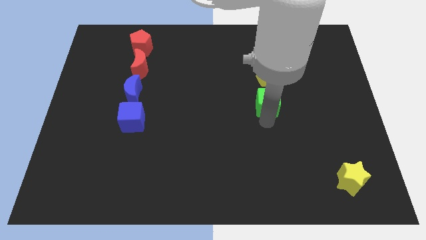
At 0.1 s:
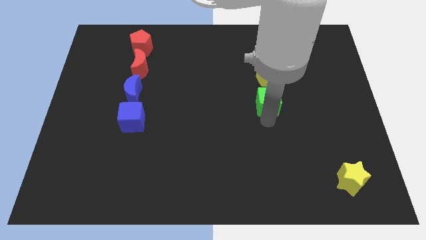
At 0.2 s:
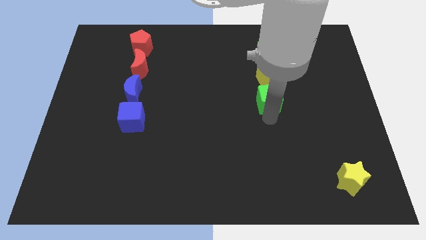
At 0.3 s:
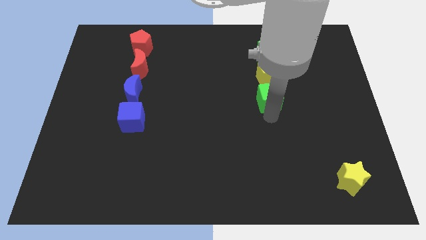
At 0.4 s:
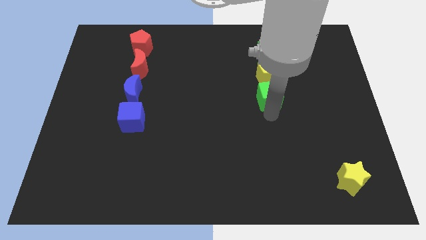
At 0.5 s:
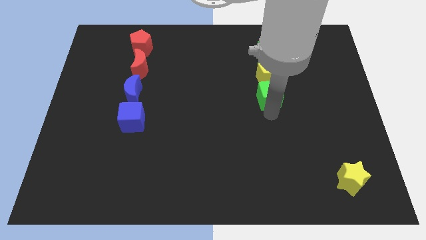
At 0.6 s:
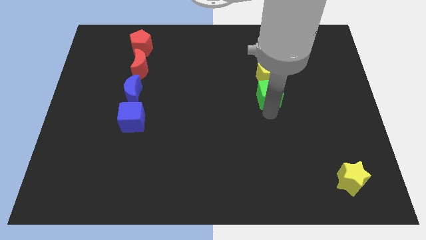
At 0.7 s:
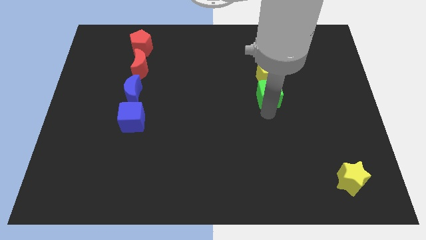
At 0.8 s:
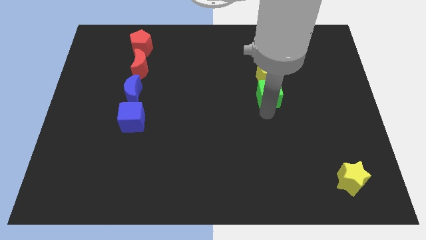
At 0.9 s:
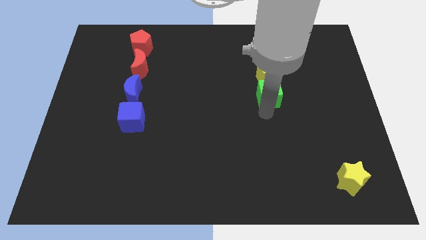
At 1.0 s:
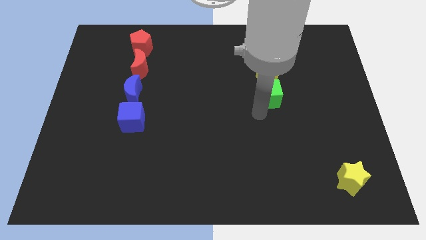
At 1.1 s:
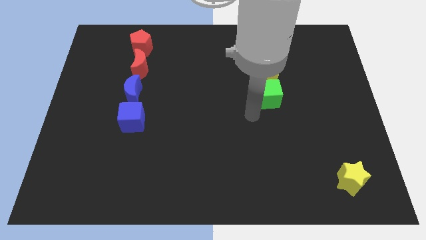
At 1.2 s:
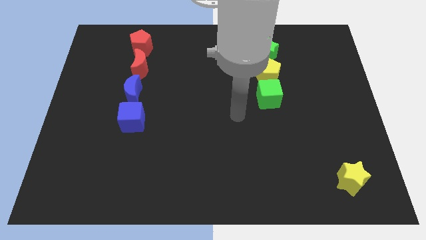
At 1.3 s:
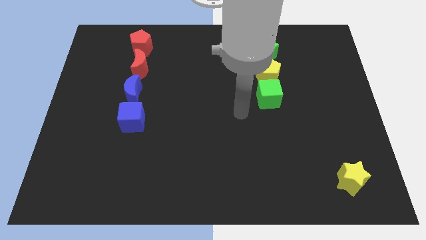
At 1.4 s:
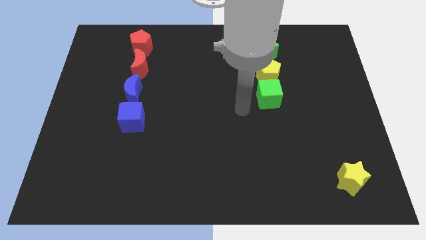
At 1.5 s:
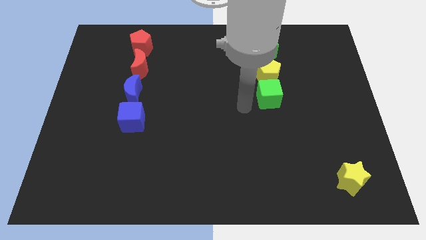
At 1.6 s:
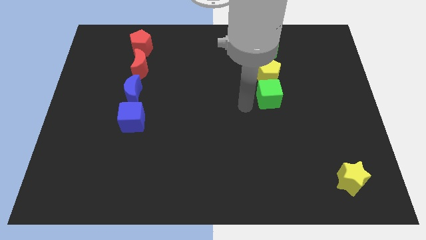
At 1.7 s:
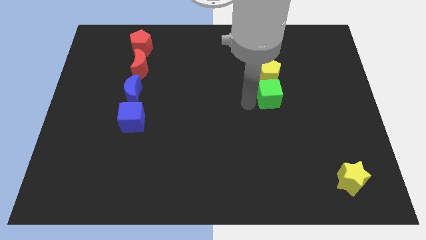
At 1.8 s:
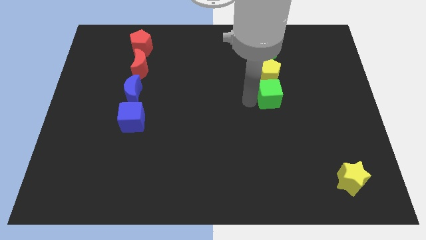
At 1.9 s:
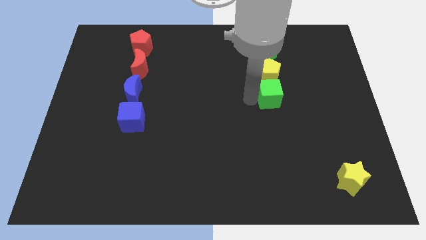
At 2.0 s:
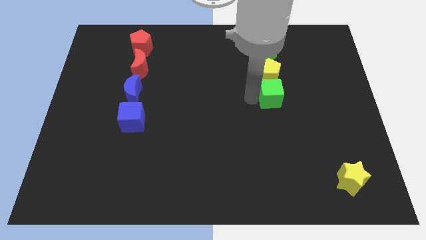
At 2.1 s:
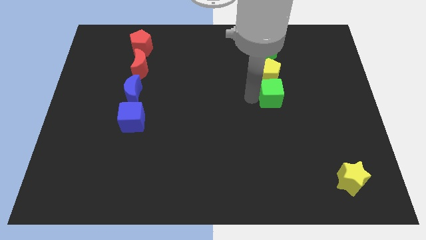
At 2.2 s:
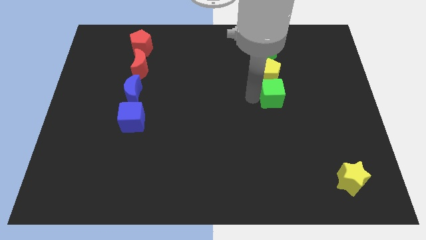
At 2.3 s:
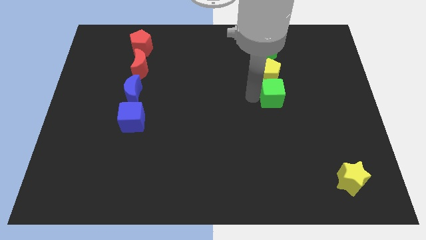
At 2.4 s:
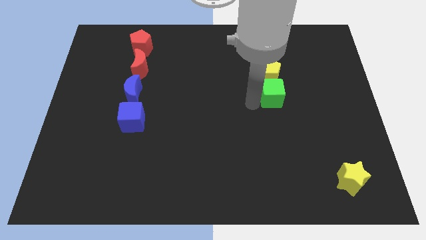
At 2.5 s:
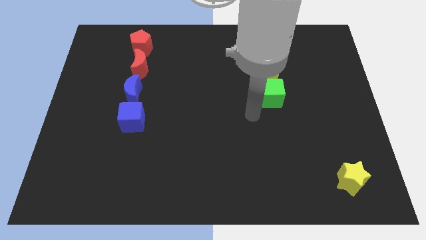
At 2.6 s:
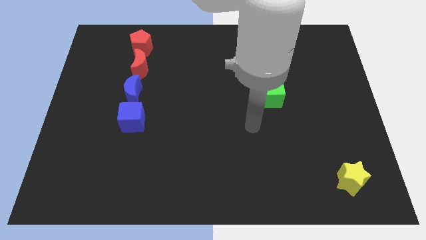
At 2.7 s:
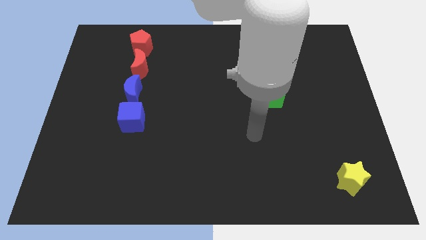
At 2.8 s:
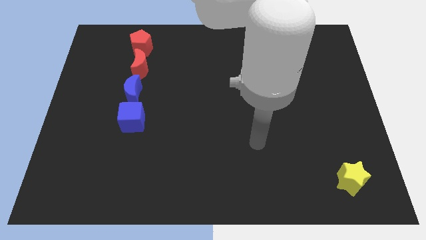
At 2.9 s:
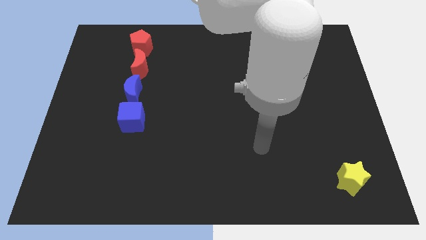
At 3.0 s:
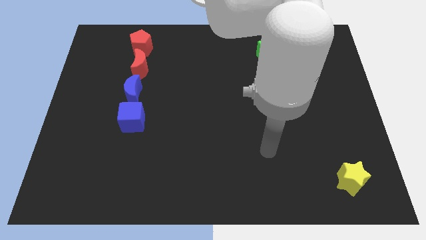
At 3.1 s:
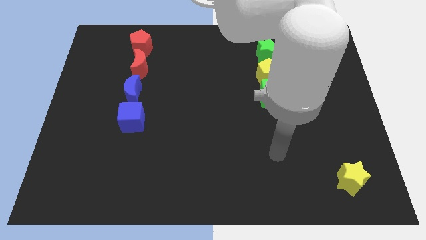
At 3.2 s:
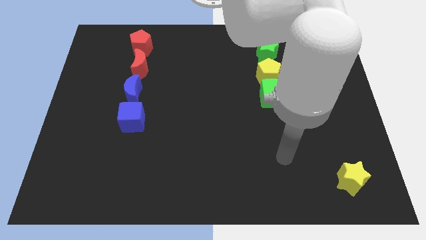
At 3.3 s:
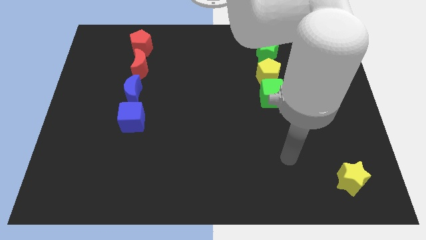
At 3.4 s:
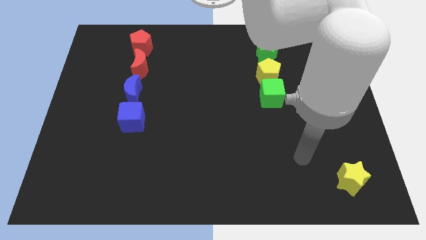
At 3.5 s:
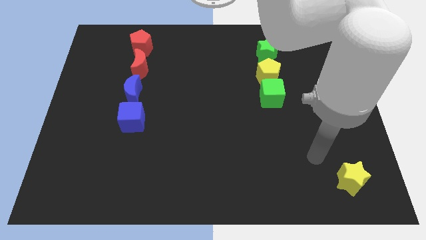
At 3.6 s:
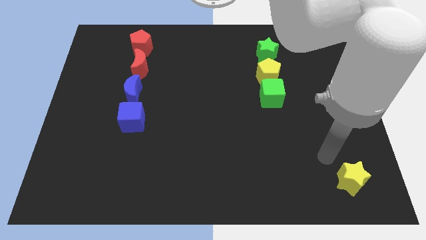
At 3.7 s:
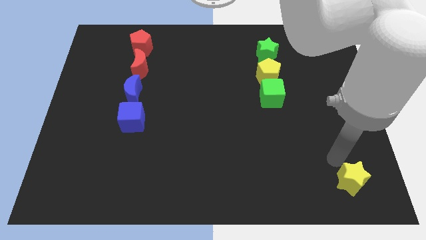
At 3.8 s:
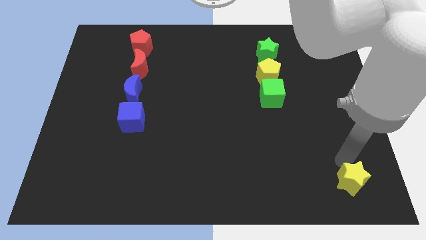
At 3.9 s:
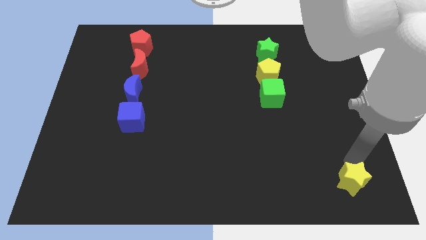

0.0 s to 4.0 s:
push the green cube slightly up

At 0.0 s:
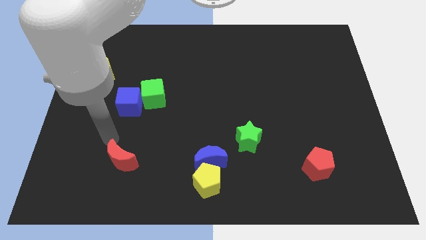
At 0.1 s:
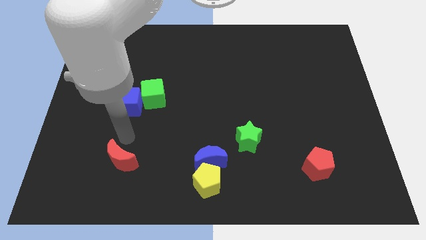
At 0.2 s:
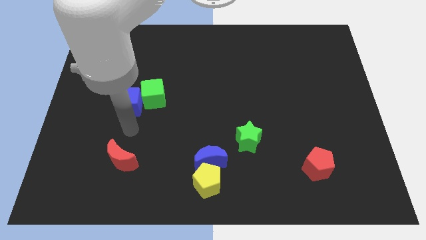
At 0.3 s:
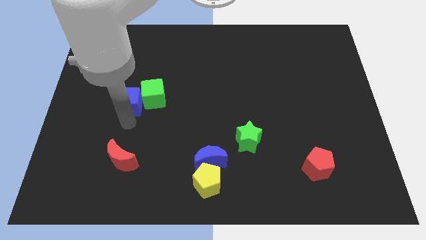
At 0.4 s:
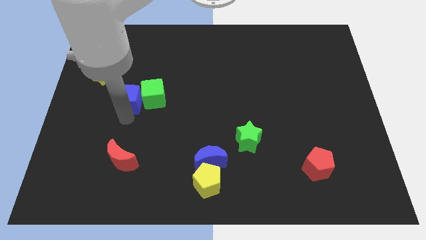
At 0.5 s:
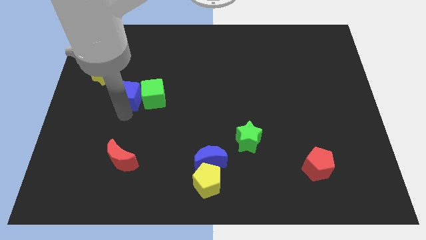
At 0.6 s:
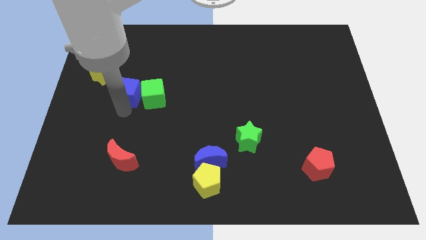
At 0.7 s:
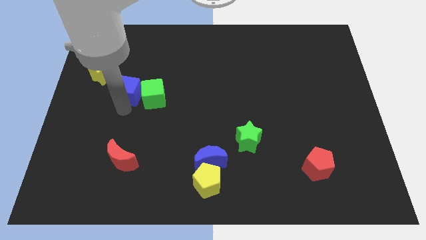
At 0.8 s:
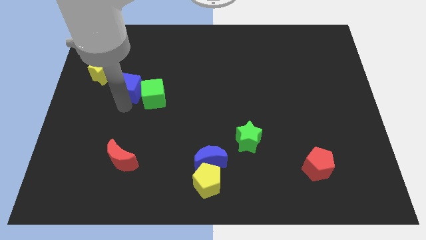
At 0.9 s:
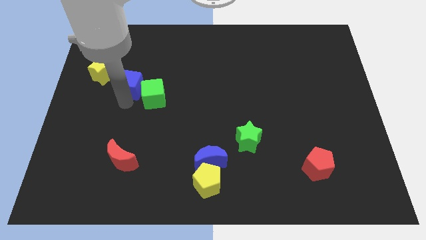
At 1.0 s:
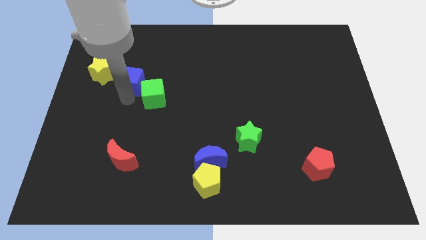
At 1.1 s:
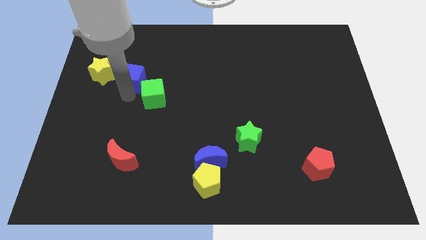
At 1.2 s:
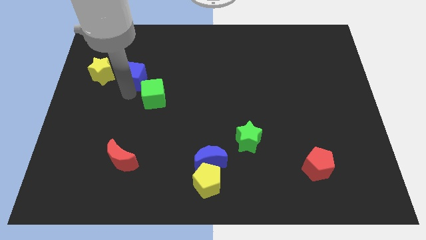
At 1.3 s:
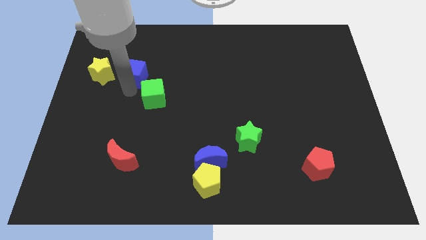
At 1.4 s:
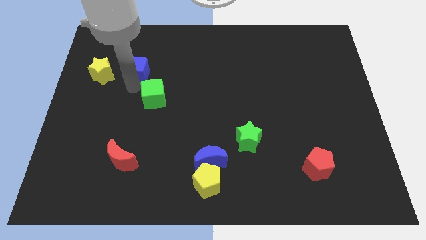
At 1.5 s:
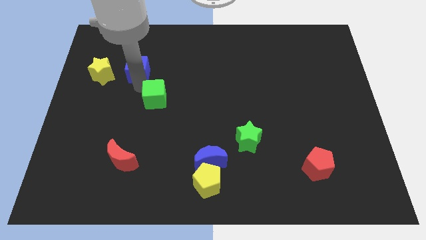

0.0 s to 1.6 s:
move the blue cube slightly upwards

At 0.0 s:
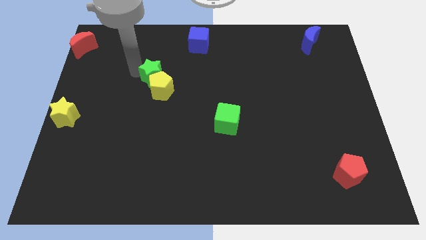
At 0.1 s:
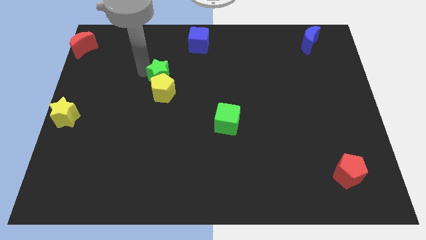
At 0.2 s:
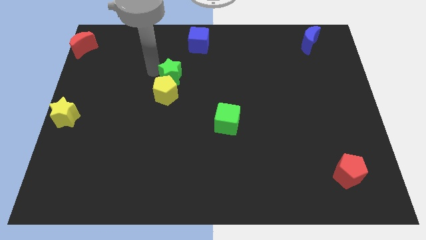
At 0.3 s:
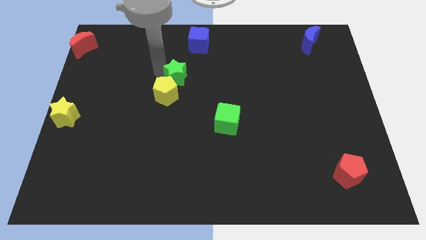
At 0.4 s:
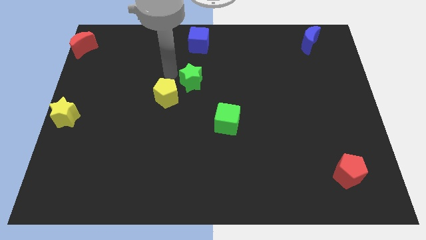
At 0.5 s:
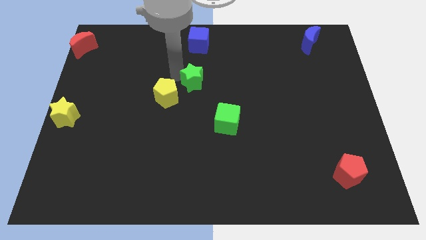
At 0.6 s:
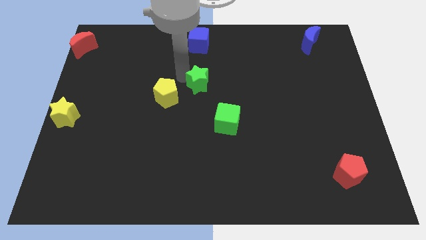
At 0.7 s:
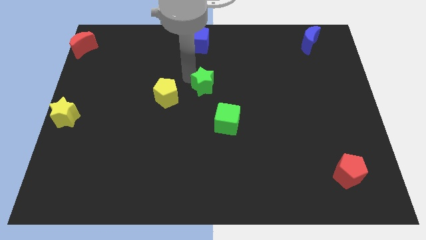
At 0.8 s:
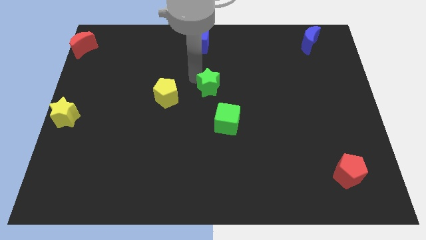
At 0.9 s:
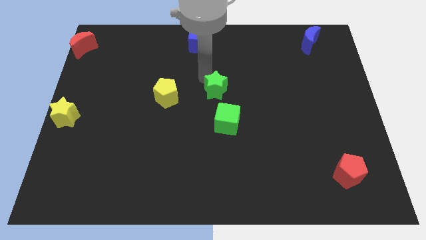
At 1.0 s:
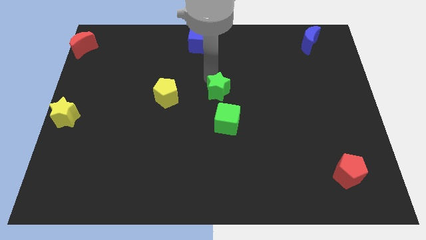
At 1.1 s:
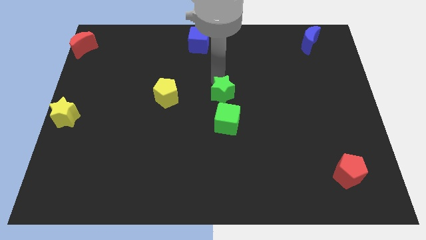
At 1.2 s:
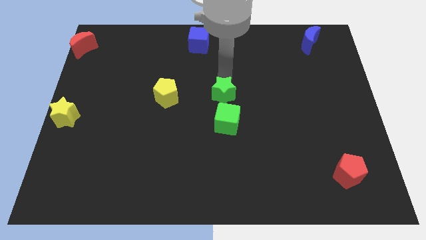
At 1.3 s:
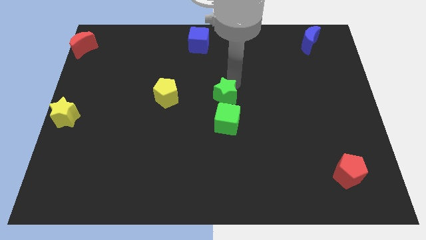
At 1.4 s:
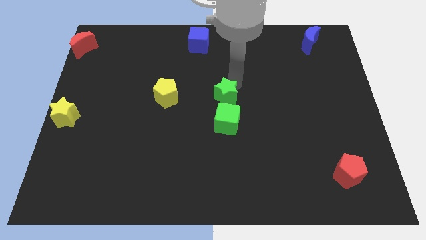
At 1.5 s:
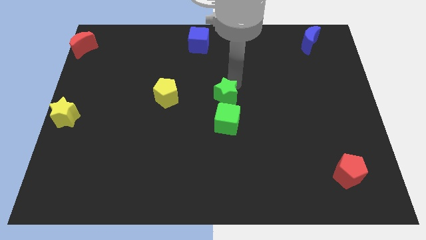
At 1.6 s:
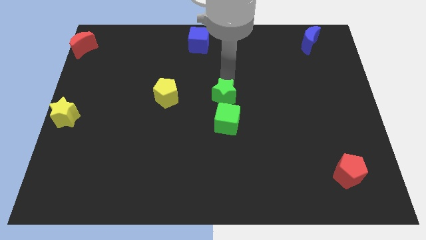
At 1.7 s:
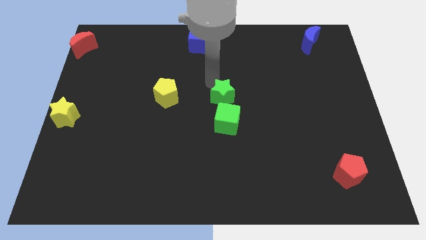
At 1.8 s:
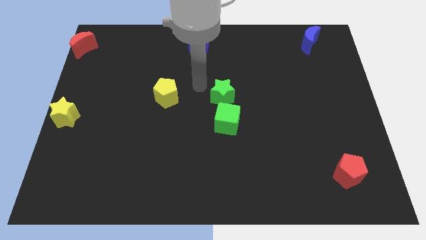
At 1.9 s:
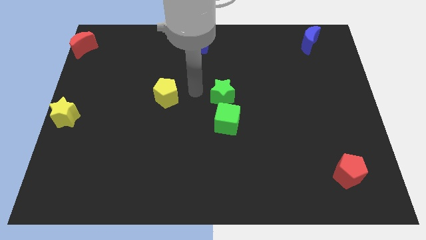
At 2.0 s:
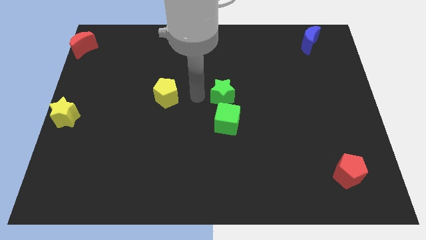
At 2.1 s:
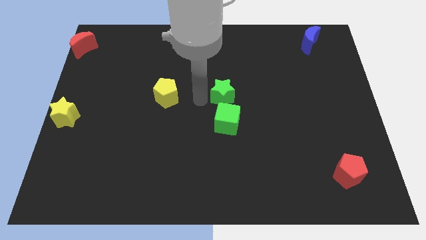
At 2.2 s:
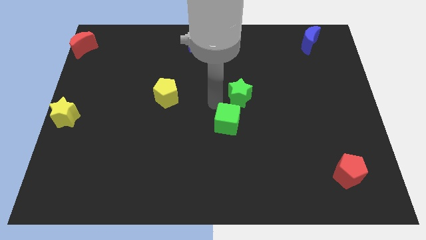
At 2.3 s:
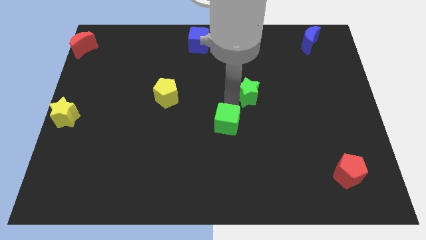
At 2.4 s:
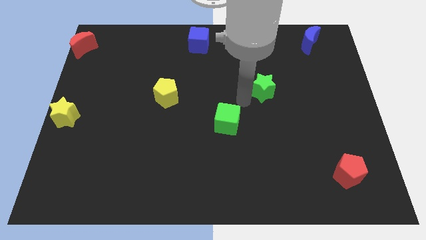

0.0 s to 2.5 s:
move the green star to the center of the board

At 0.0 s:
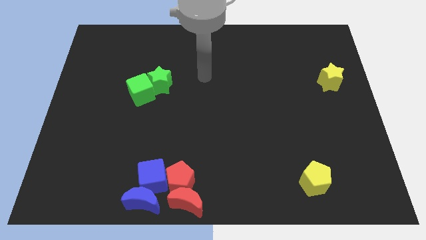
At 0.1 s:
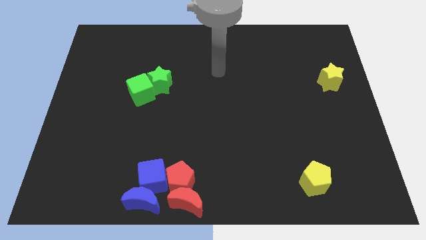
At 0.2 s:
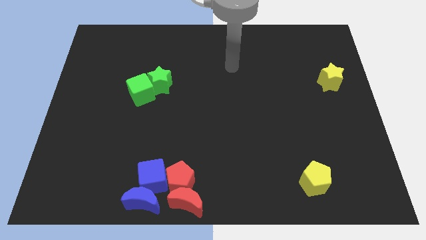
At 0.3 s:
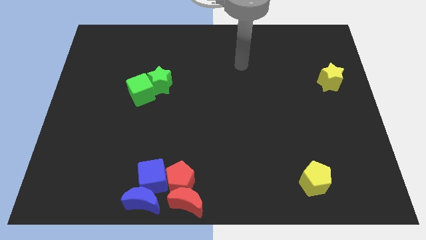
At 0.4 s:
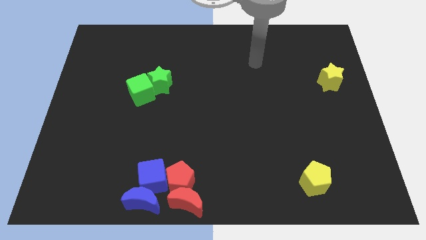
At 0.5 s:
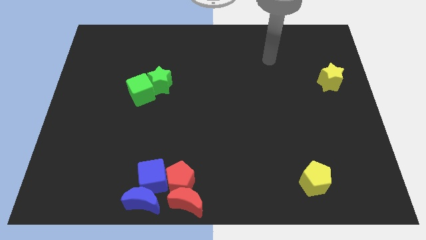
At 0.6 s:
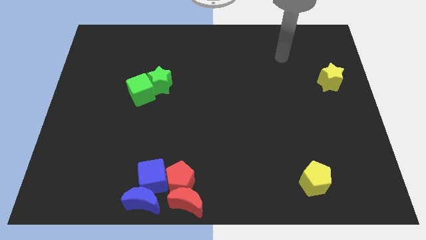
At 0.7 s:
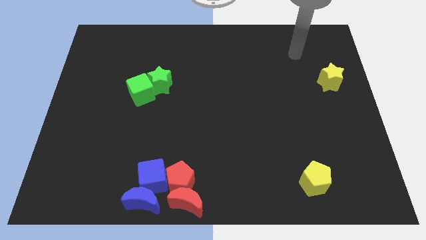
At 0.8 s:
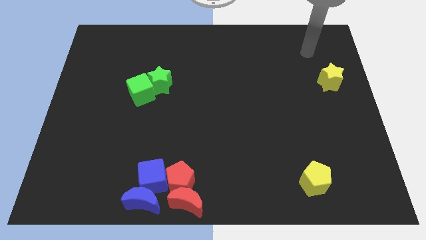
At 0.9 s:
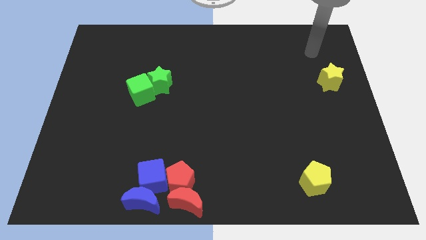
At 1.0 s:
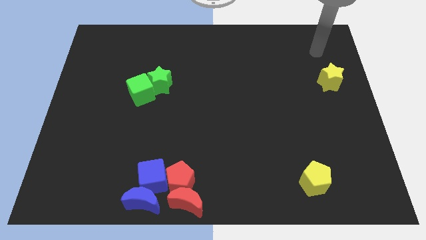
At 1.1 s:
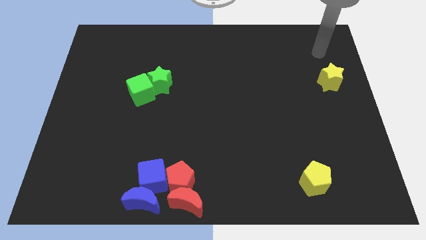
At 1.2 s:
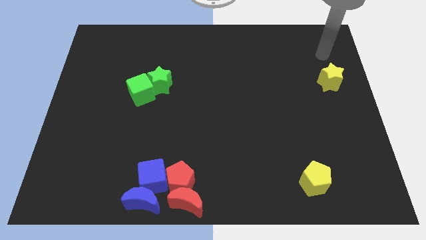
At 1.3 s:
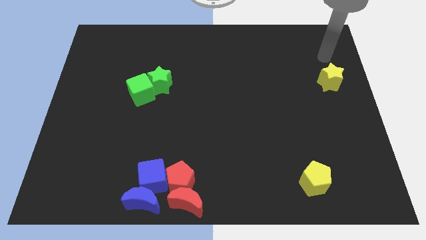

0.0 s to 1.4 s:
move the arm towards the top of the yellow star
